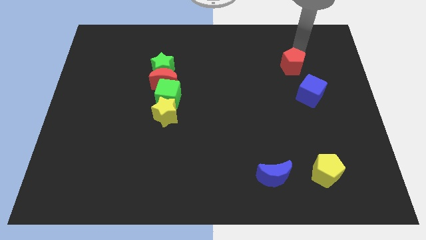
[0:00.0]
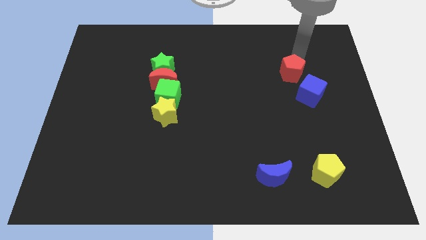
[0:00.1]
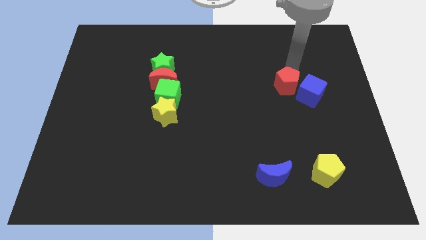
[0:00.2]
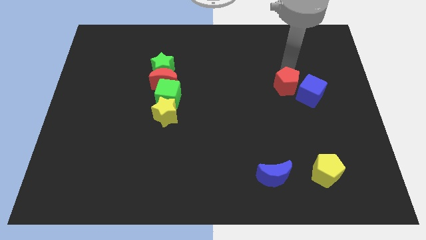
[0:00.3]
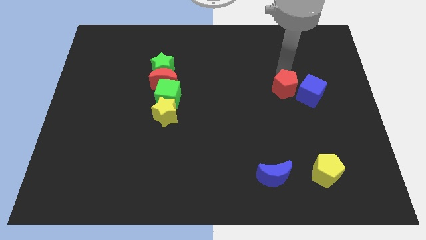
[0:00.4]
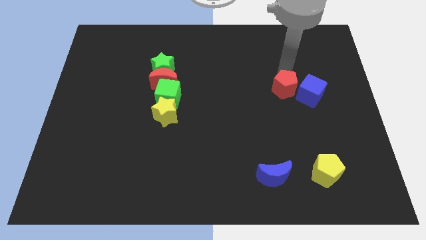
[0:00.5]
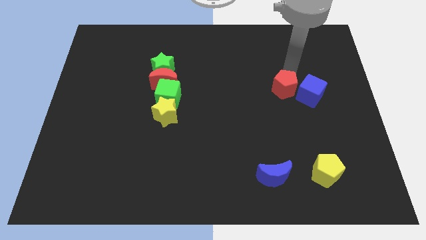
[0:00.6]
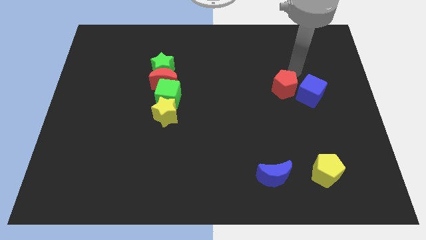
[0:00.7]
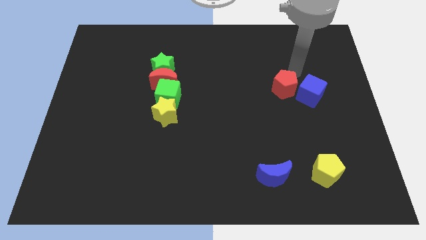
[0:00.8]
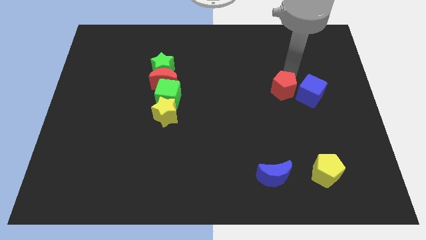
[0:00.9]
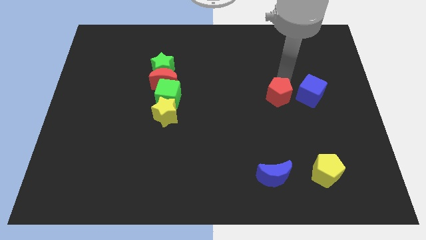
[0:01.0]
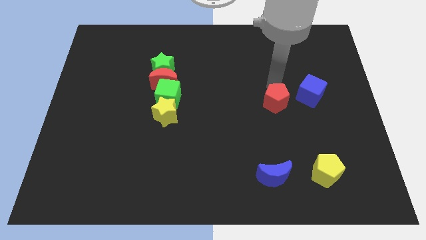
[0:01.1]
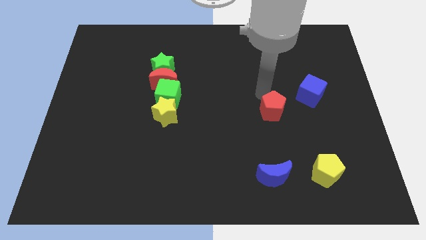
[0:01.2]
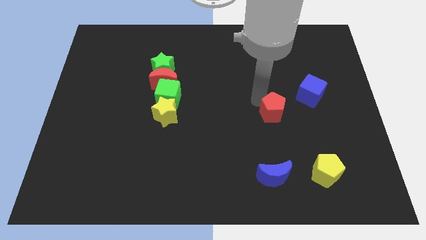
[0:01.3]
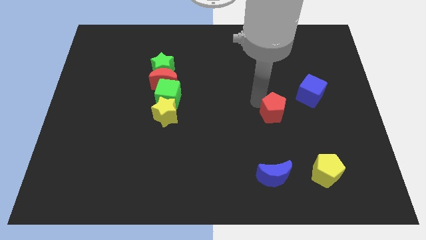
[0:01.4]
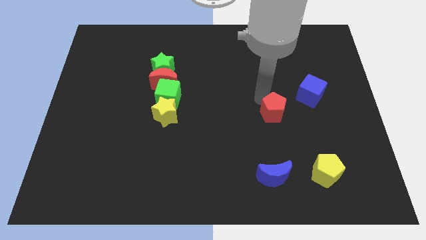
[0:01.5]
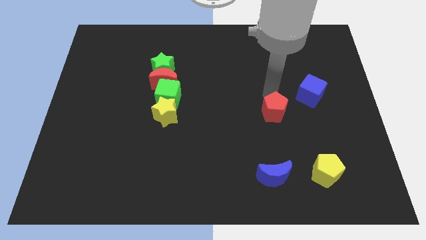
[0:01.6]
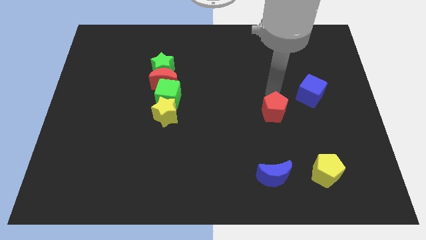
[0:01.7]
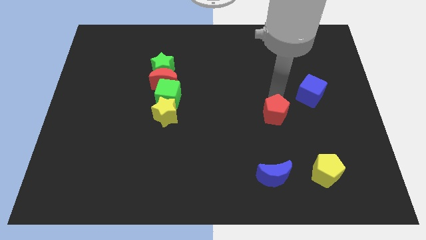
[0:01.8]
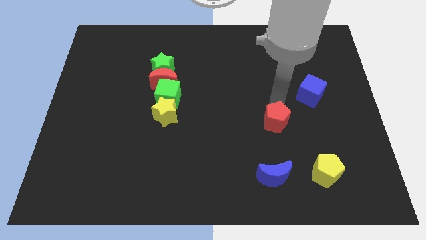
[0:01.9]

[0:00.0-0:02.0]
push red pentagon downwards

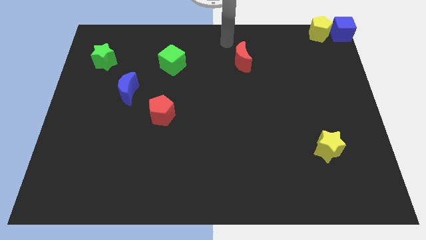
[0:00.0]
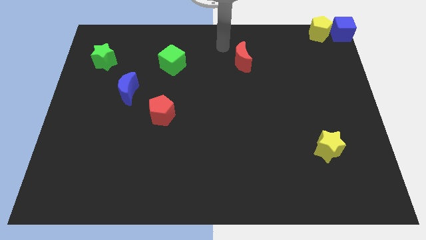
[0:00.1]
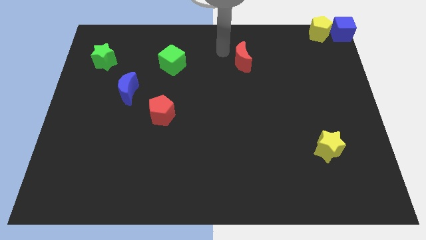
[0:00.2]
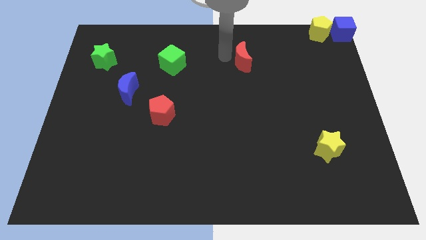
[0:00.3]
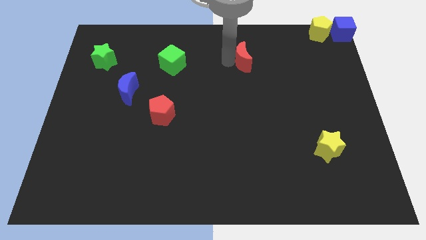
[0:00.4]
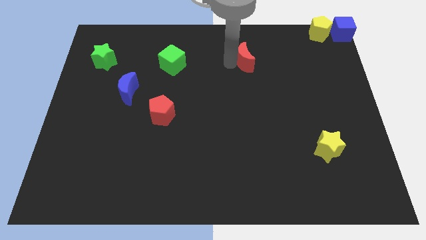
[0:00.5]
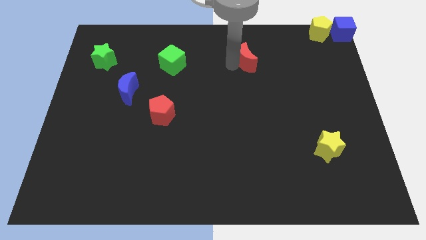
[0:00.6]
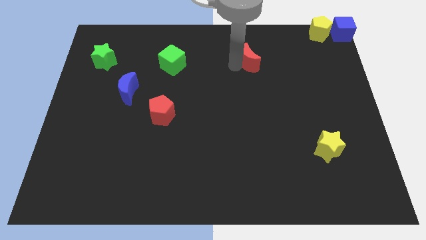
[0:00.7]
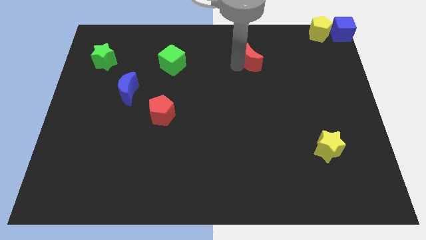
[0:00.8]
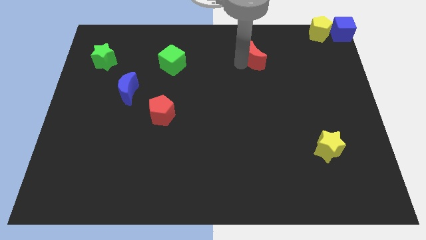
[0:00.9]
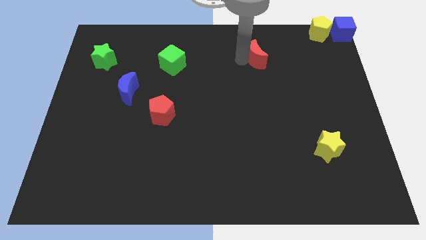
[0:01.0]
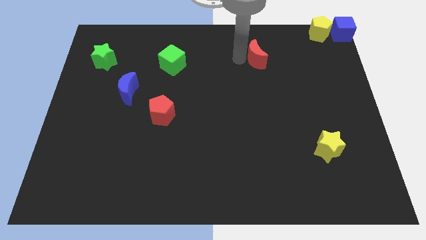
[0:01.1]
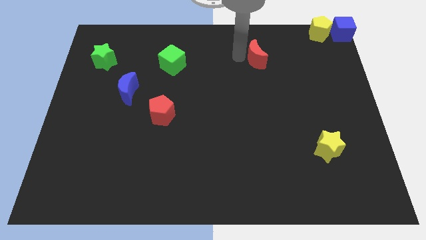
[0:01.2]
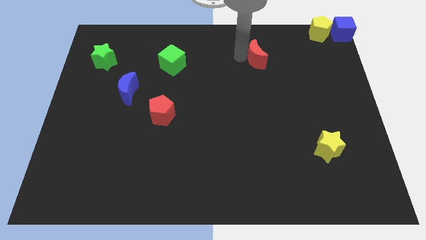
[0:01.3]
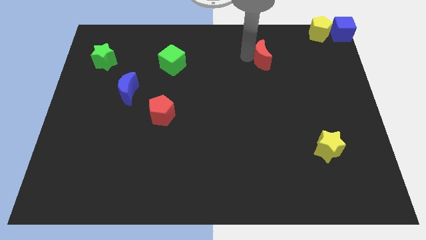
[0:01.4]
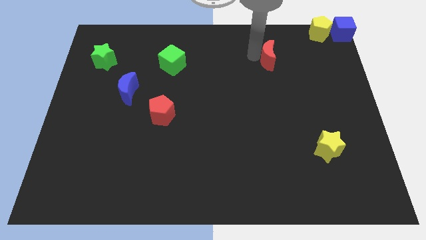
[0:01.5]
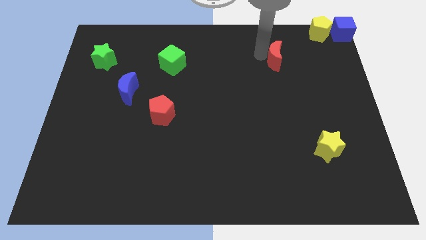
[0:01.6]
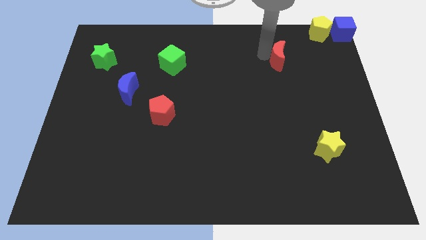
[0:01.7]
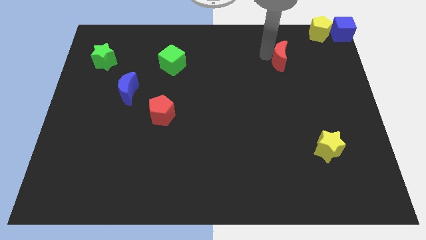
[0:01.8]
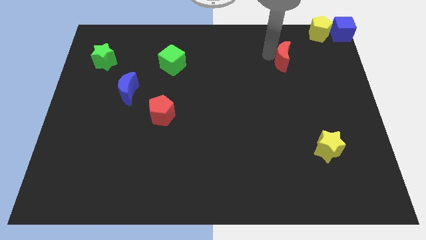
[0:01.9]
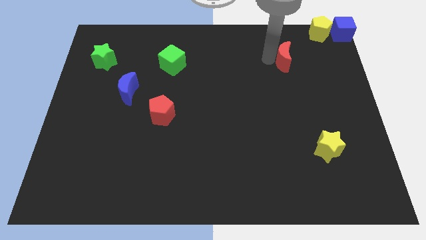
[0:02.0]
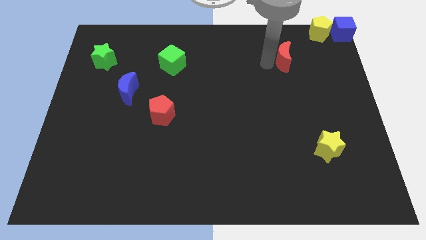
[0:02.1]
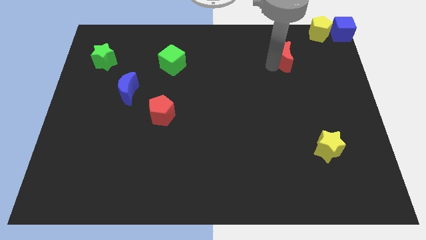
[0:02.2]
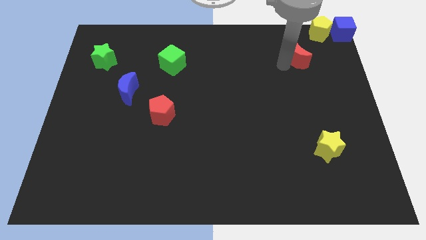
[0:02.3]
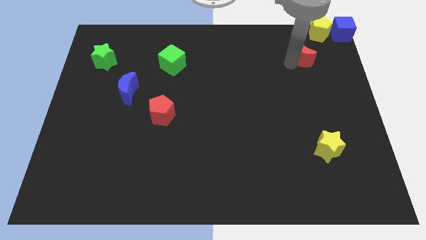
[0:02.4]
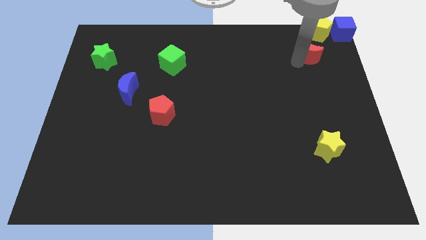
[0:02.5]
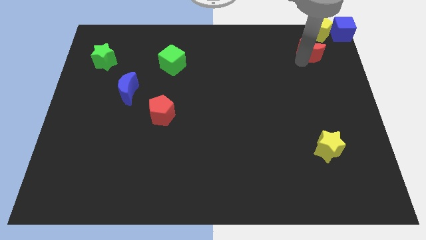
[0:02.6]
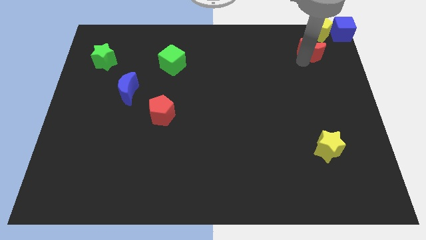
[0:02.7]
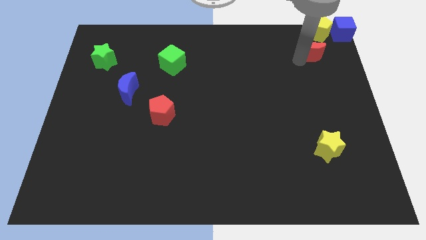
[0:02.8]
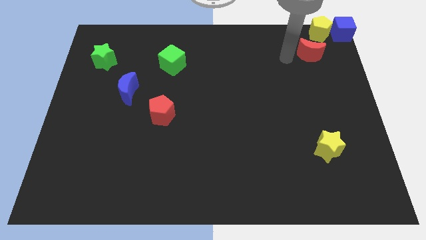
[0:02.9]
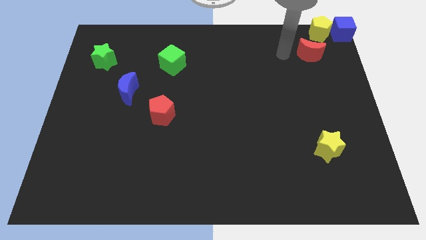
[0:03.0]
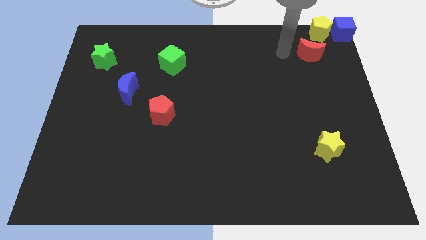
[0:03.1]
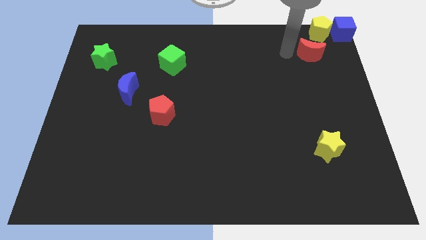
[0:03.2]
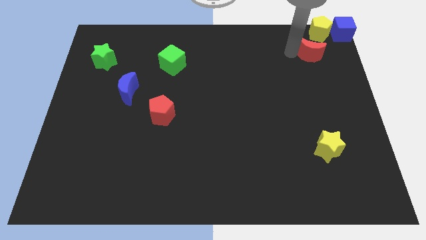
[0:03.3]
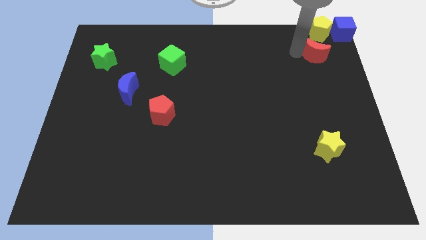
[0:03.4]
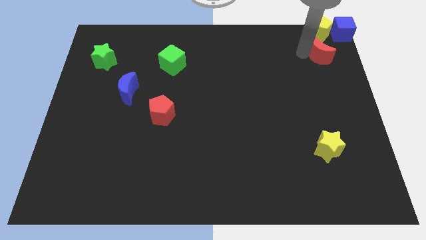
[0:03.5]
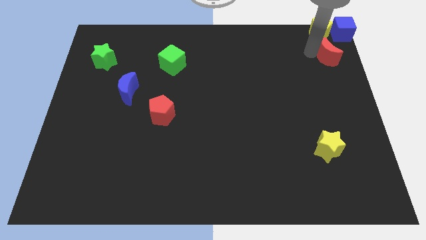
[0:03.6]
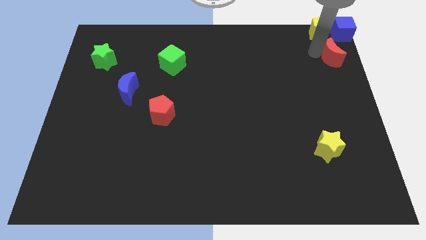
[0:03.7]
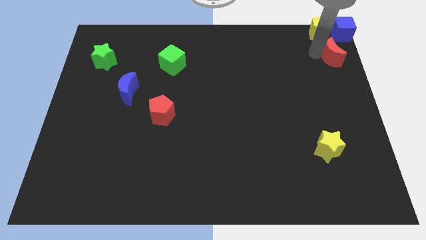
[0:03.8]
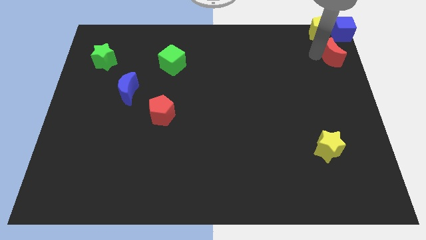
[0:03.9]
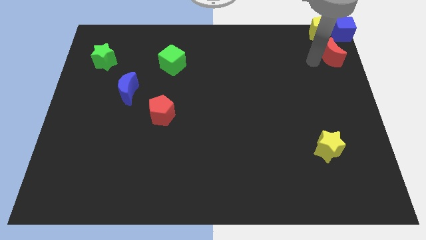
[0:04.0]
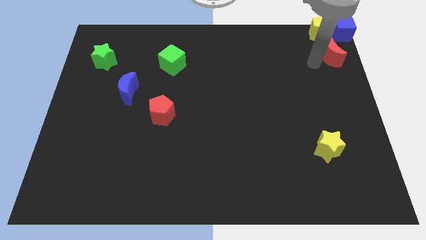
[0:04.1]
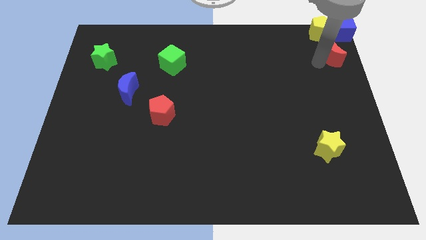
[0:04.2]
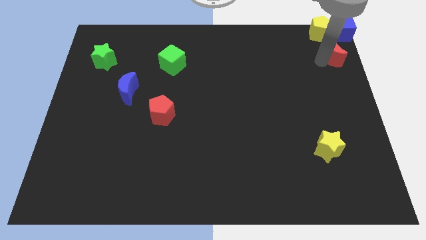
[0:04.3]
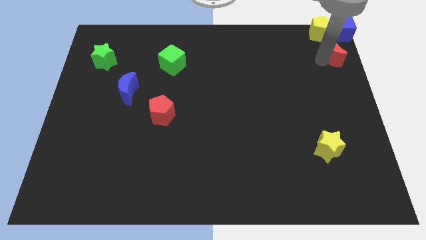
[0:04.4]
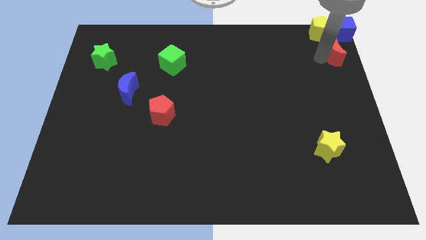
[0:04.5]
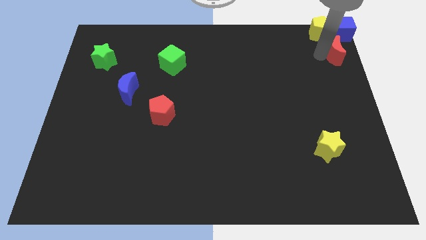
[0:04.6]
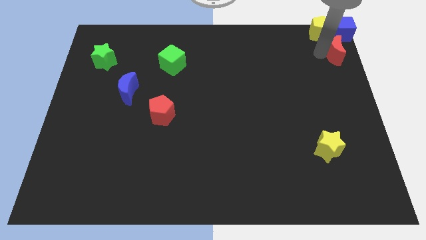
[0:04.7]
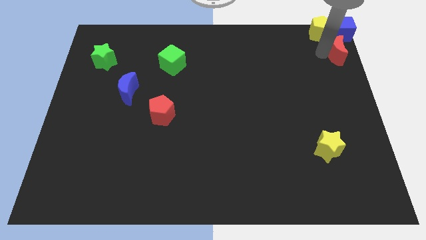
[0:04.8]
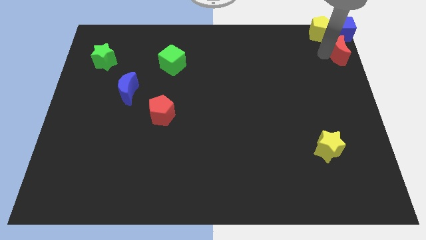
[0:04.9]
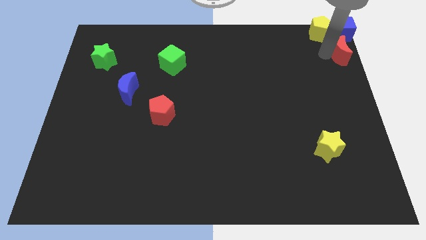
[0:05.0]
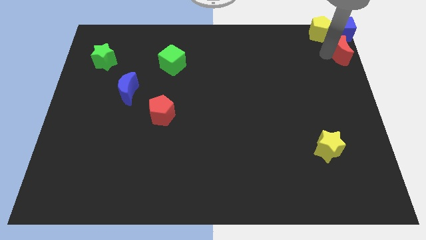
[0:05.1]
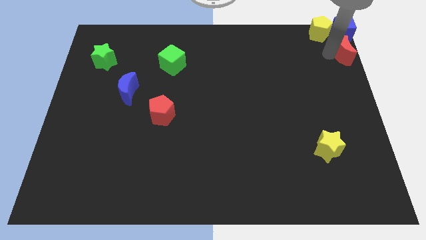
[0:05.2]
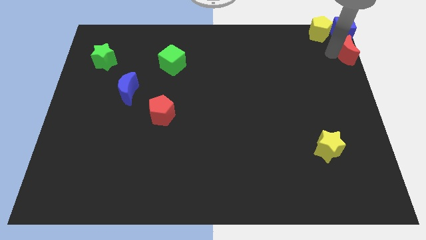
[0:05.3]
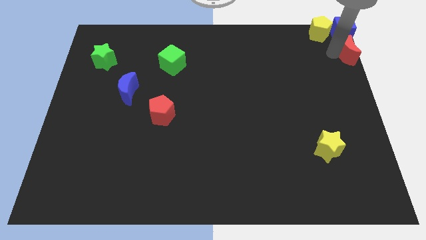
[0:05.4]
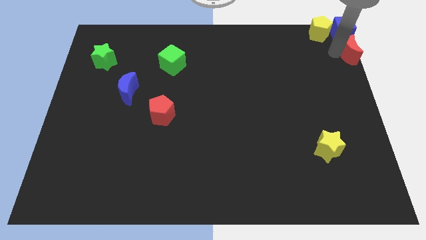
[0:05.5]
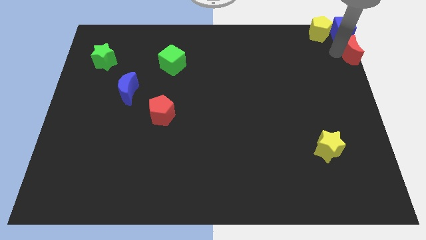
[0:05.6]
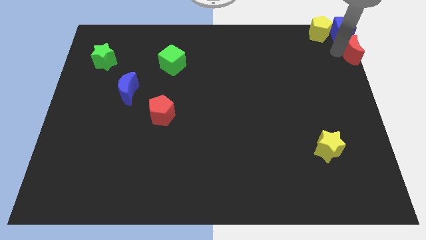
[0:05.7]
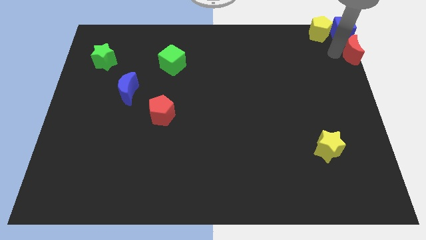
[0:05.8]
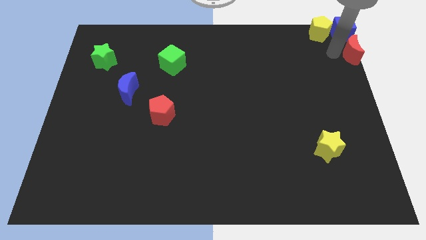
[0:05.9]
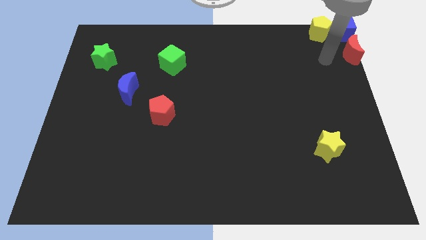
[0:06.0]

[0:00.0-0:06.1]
move the red moon to the bottom side of the blue cube

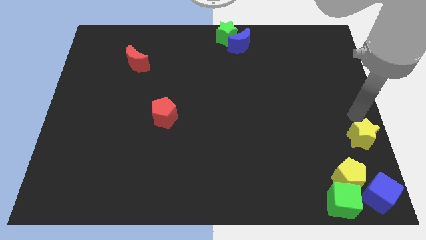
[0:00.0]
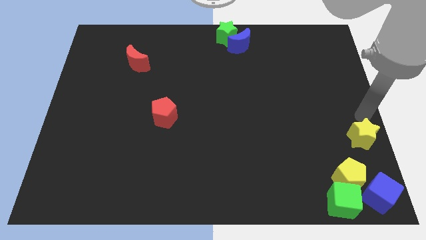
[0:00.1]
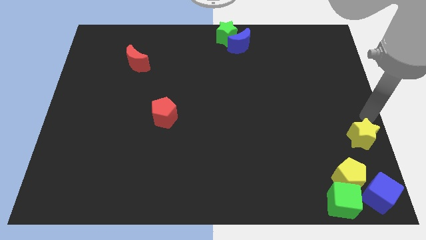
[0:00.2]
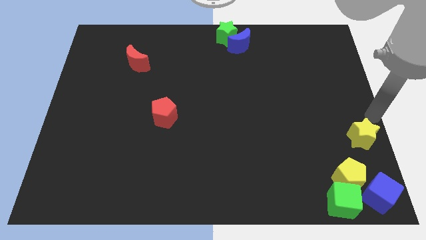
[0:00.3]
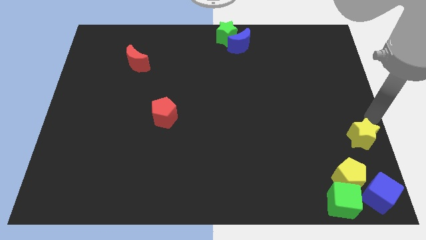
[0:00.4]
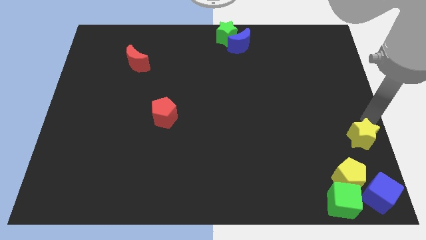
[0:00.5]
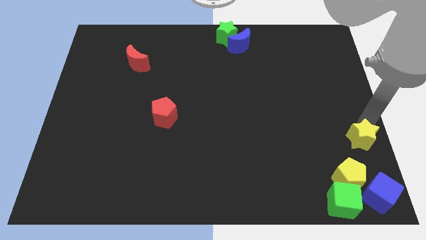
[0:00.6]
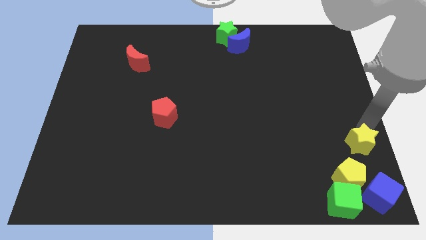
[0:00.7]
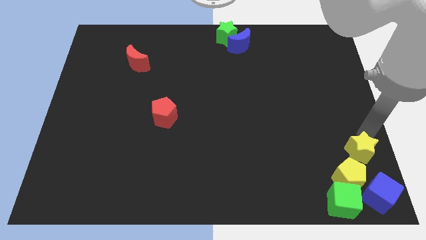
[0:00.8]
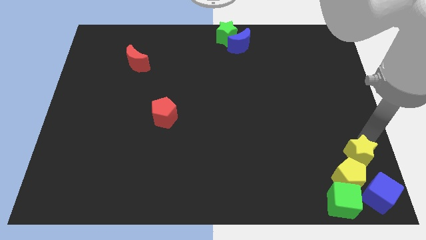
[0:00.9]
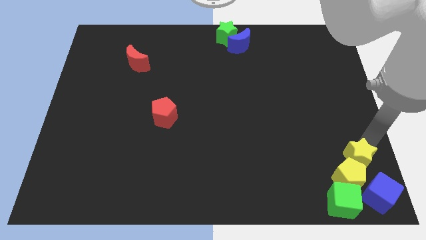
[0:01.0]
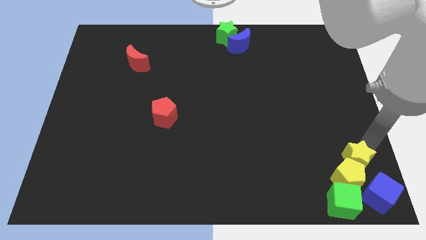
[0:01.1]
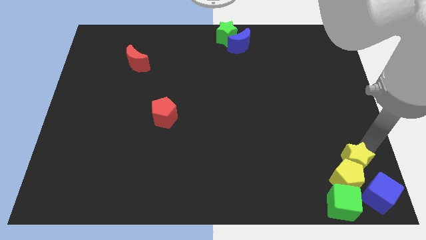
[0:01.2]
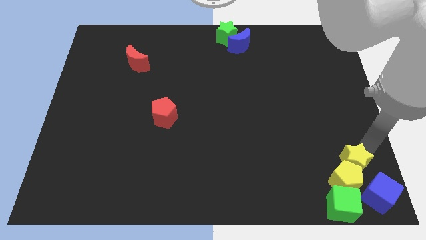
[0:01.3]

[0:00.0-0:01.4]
move the yellow star above the yellow pentagon
